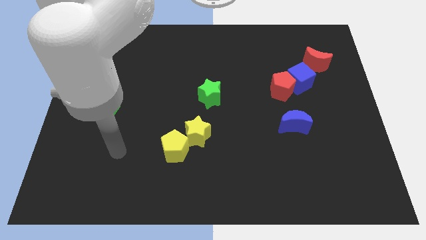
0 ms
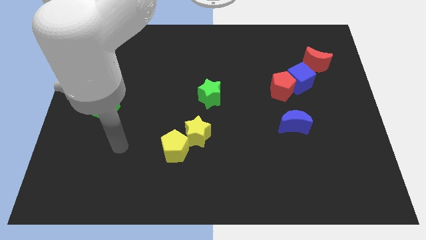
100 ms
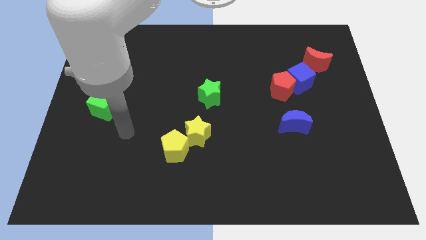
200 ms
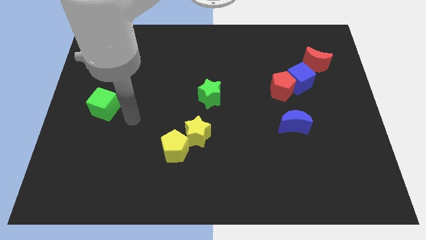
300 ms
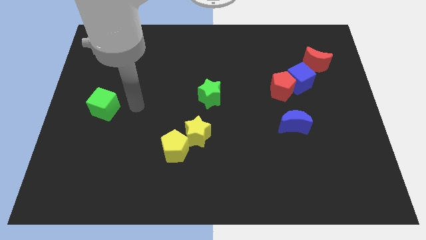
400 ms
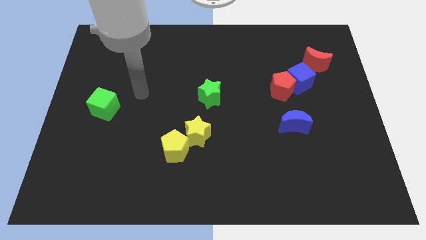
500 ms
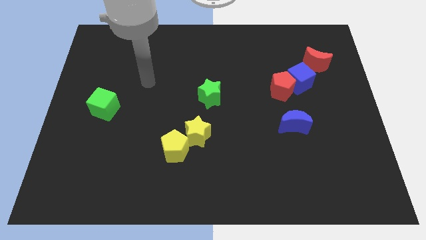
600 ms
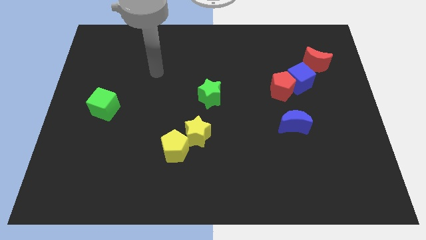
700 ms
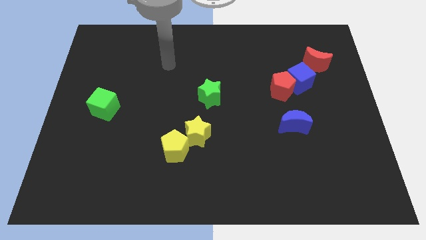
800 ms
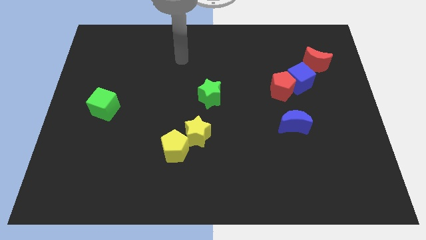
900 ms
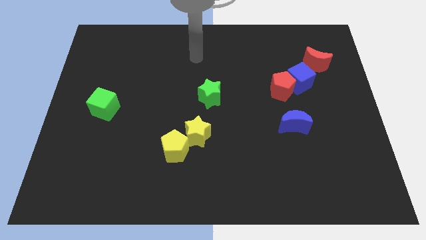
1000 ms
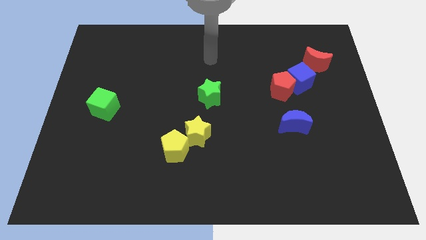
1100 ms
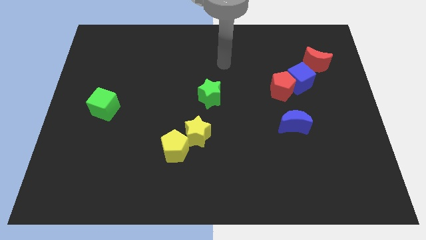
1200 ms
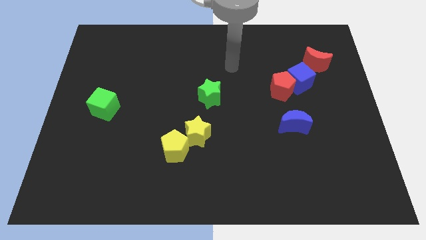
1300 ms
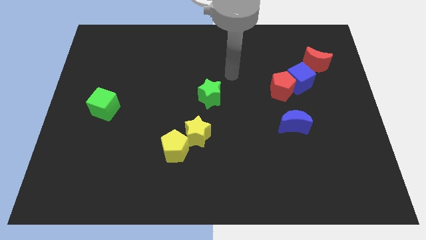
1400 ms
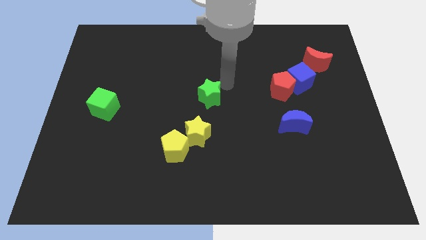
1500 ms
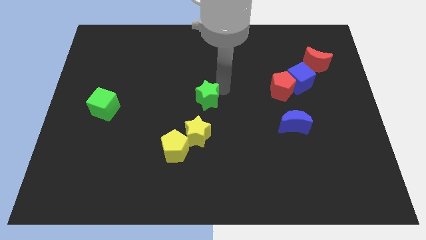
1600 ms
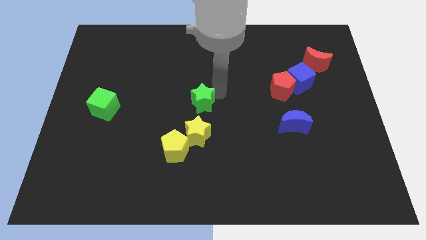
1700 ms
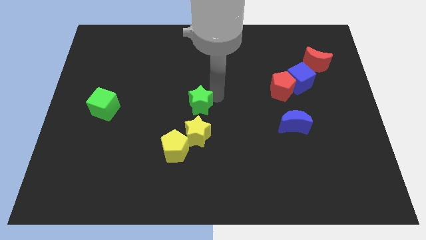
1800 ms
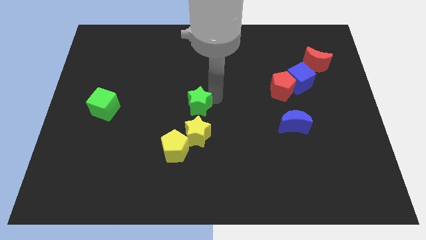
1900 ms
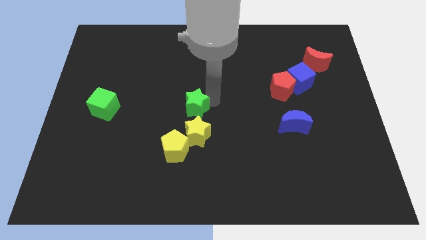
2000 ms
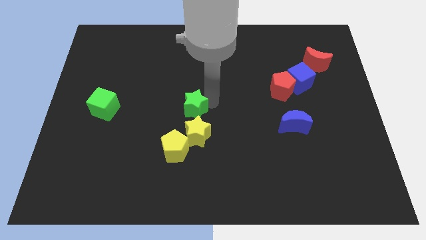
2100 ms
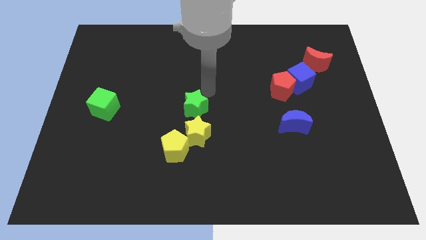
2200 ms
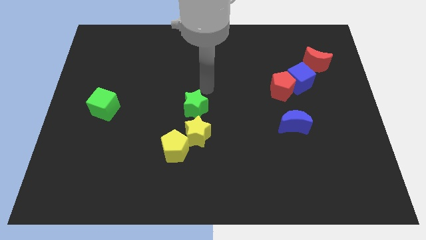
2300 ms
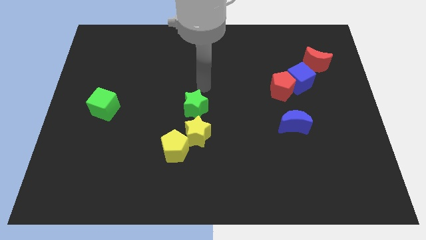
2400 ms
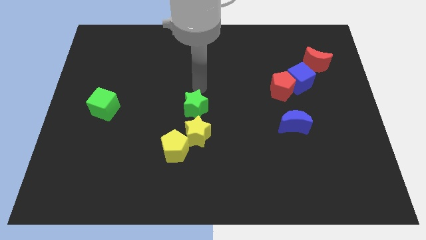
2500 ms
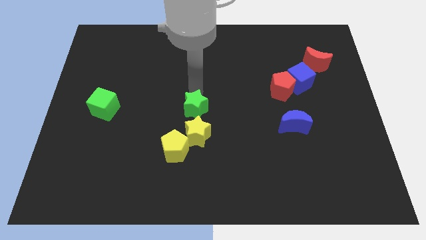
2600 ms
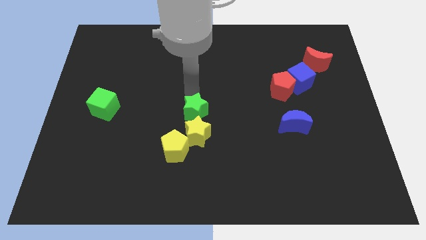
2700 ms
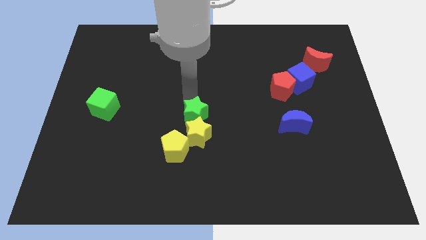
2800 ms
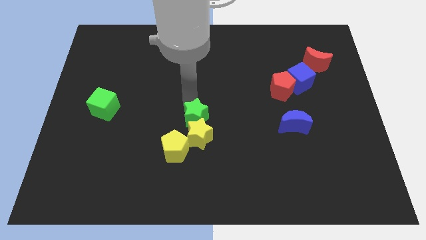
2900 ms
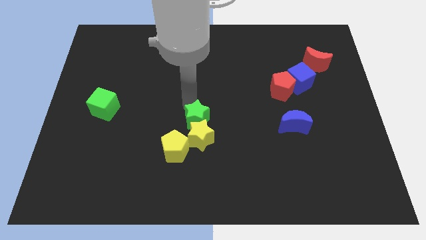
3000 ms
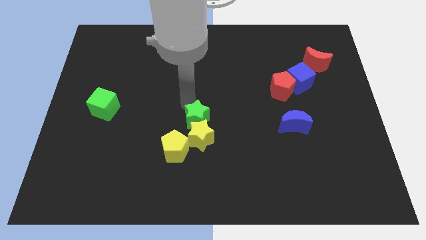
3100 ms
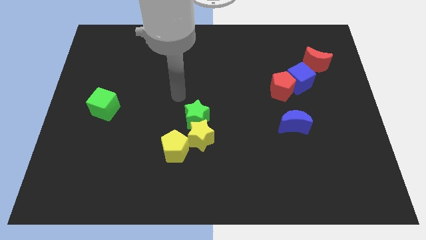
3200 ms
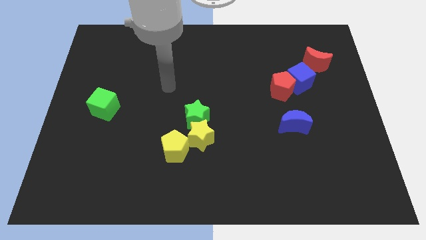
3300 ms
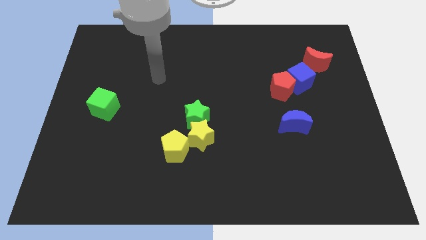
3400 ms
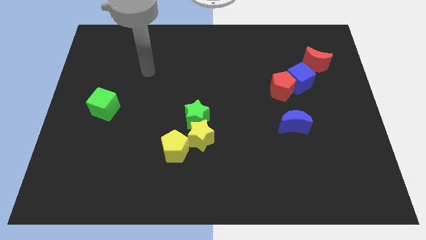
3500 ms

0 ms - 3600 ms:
move the green star into the yellow star

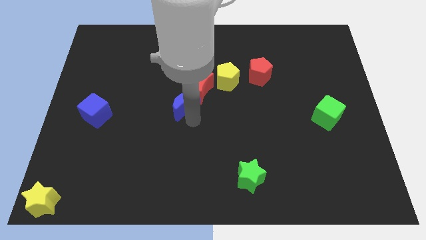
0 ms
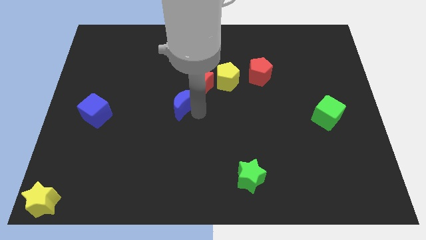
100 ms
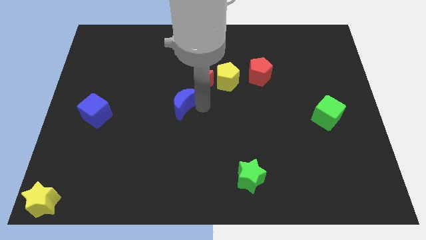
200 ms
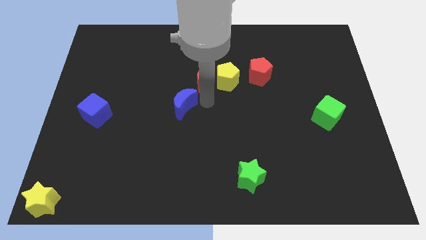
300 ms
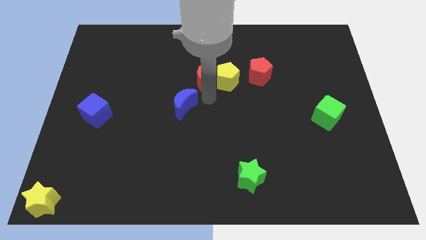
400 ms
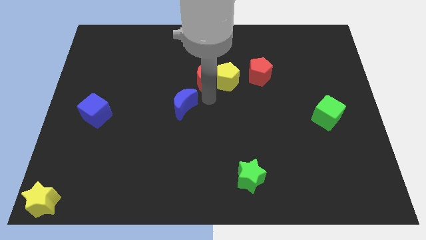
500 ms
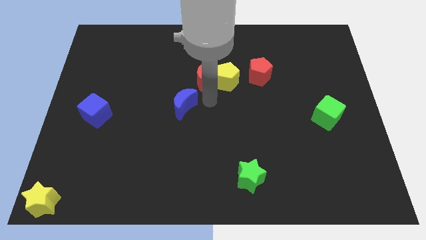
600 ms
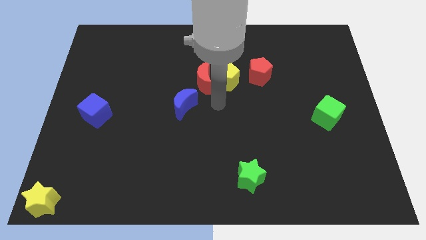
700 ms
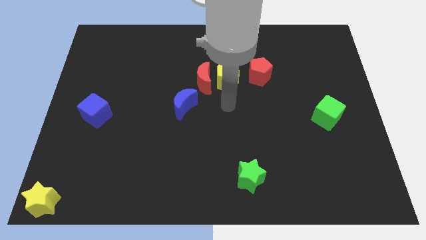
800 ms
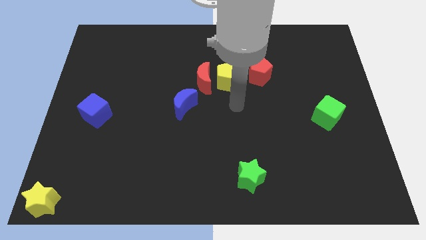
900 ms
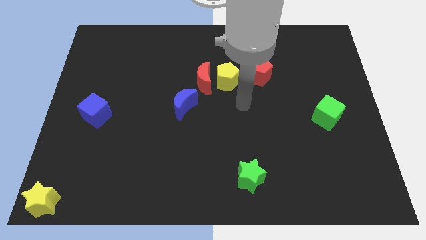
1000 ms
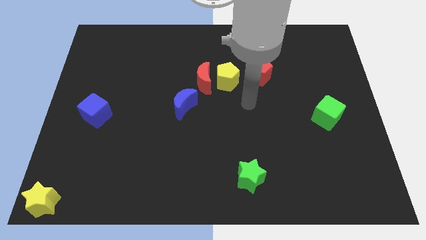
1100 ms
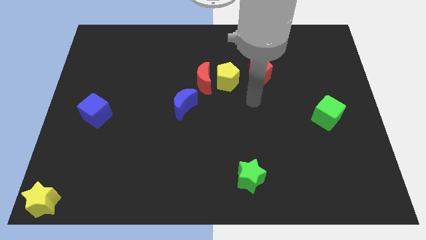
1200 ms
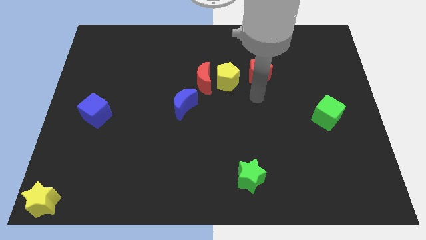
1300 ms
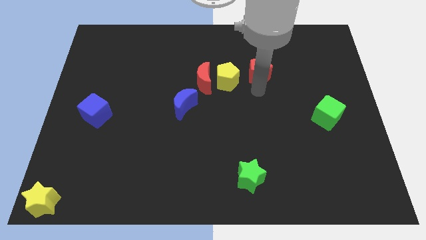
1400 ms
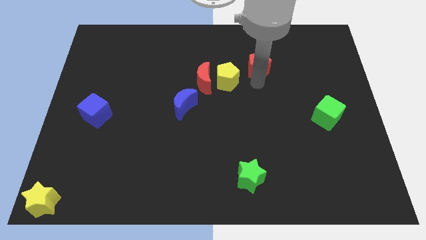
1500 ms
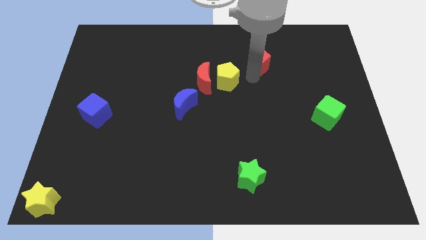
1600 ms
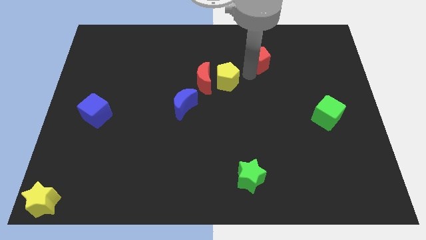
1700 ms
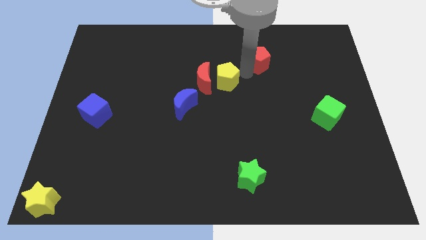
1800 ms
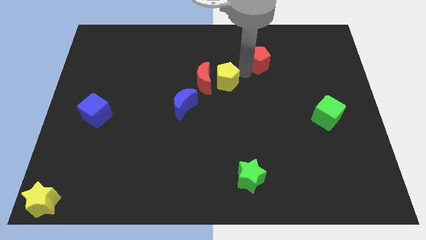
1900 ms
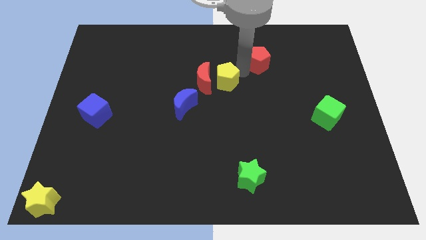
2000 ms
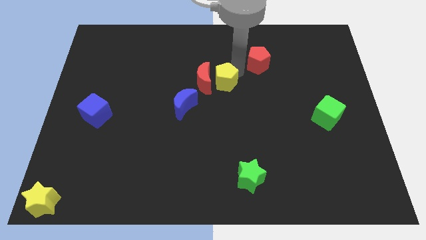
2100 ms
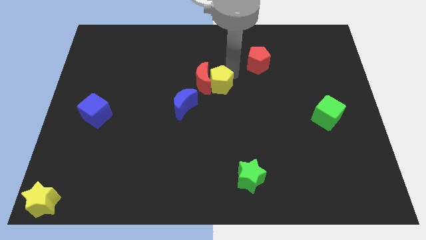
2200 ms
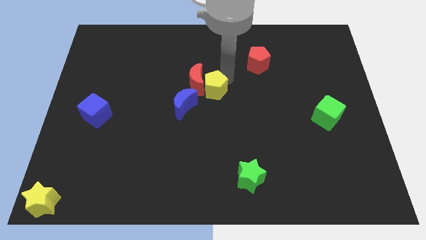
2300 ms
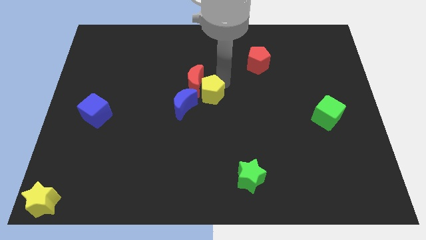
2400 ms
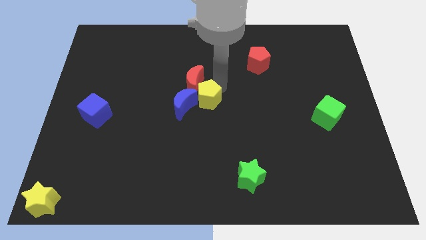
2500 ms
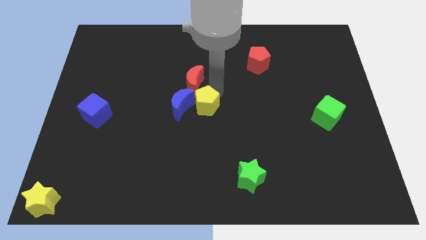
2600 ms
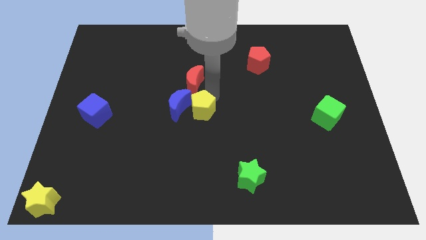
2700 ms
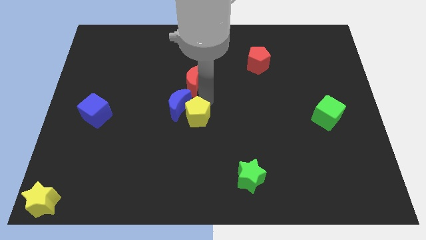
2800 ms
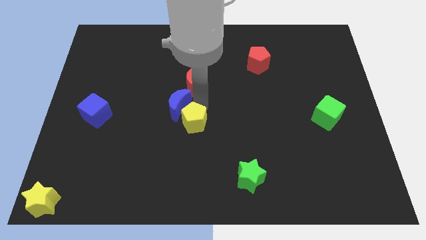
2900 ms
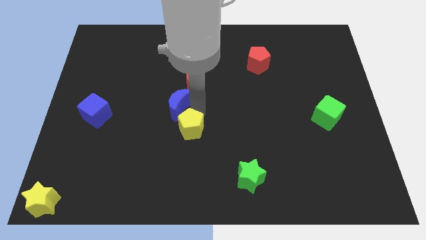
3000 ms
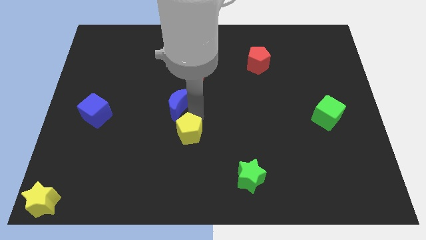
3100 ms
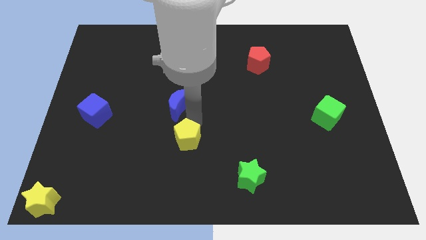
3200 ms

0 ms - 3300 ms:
slide the yellow pentagon diagonally to the top left of the green star

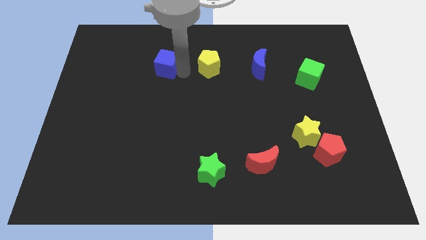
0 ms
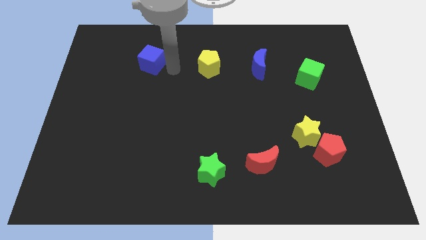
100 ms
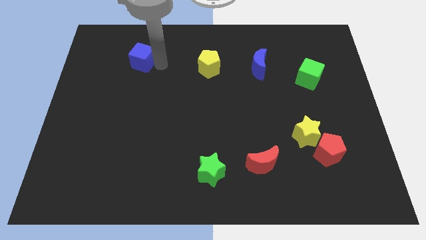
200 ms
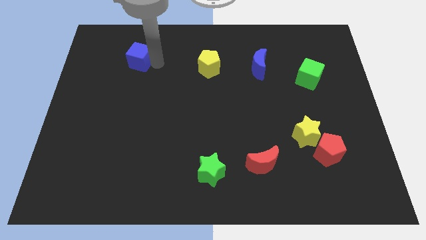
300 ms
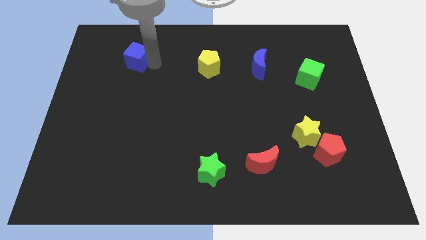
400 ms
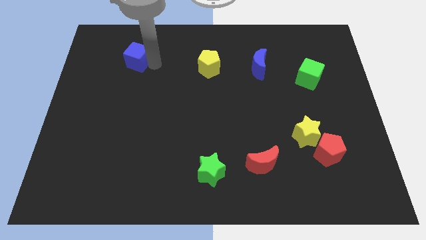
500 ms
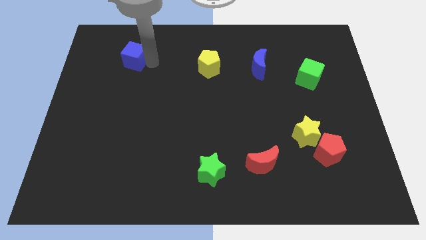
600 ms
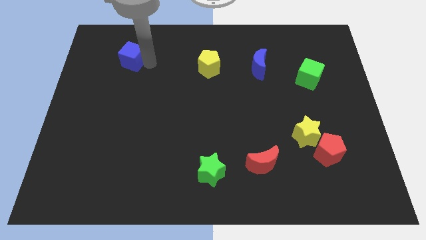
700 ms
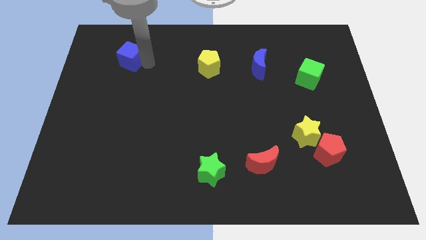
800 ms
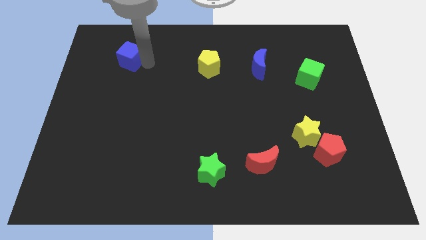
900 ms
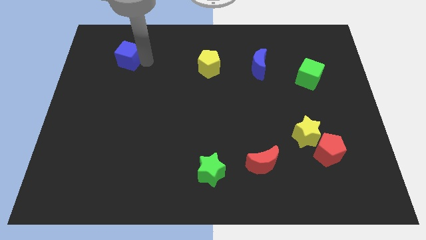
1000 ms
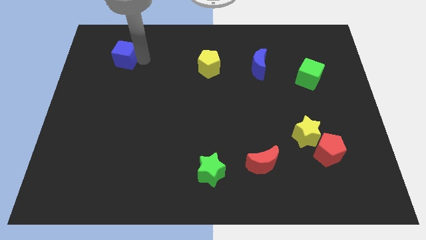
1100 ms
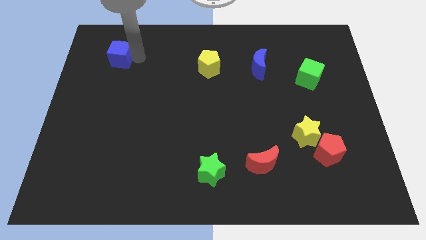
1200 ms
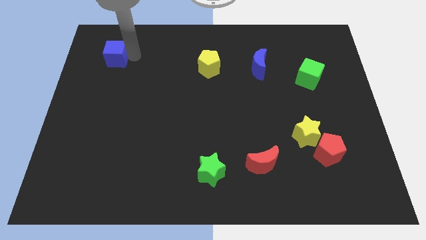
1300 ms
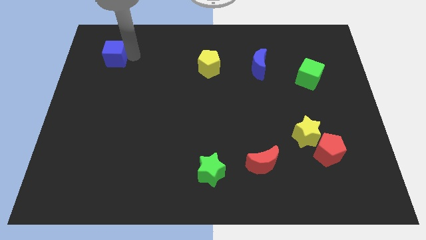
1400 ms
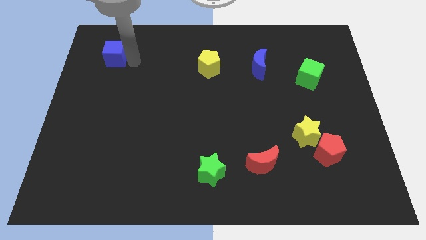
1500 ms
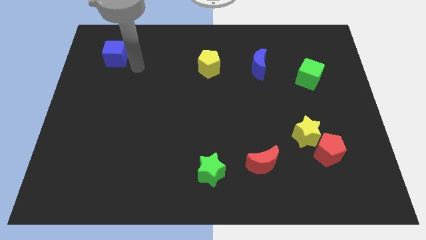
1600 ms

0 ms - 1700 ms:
move the blue cube towards the top side of the board

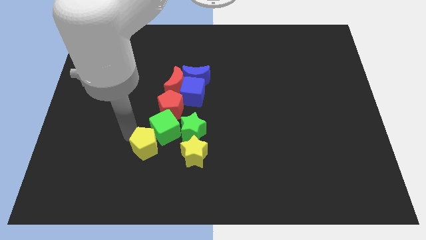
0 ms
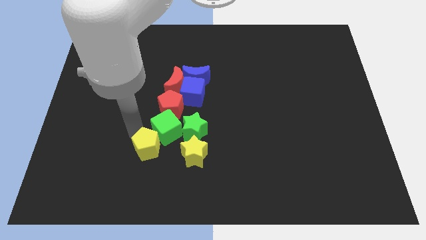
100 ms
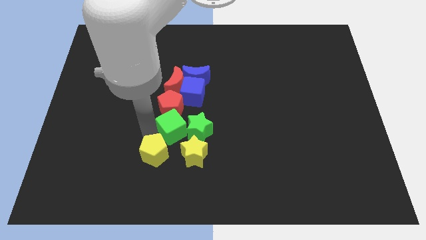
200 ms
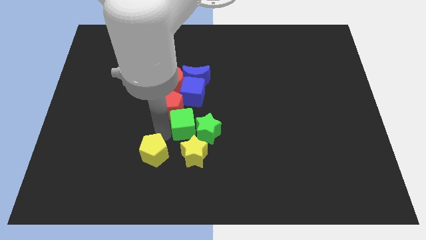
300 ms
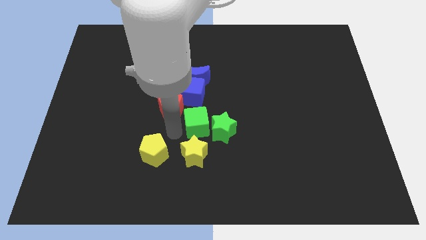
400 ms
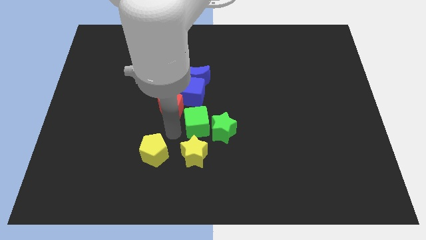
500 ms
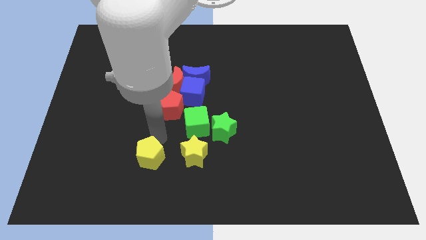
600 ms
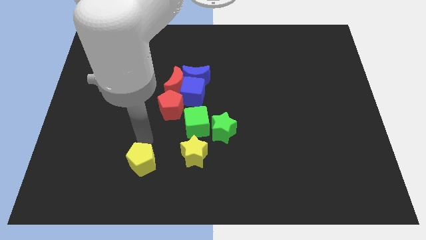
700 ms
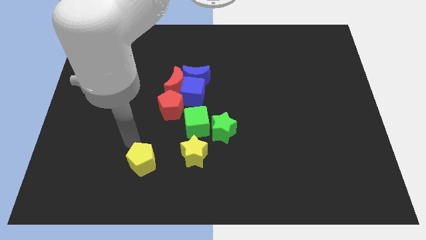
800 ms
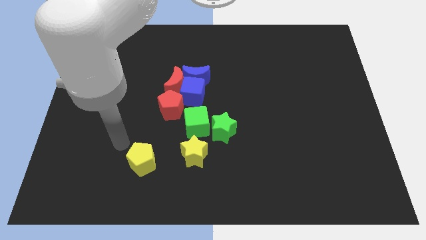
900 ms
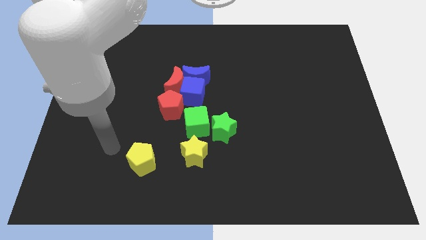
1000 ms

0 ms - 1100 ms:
separate the green cube and the yellow pentagon
